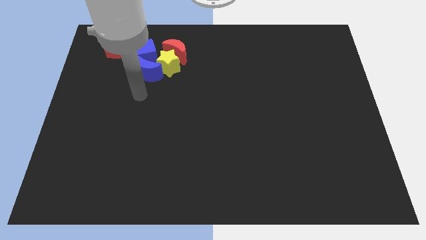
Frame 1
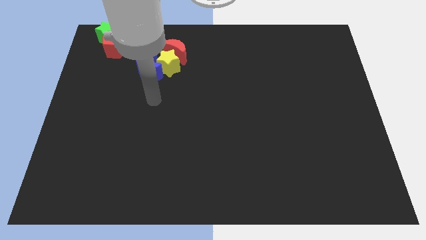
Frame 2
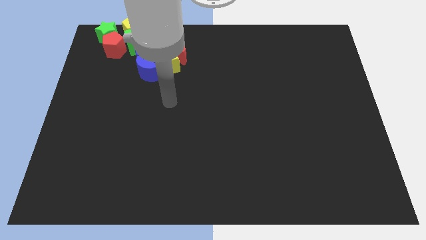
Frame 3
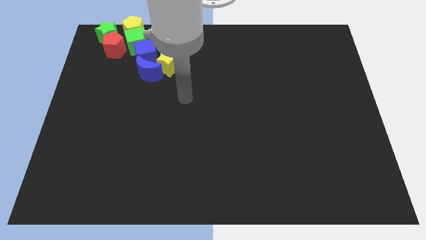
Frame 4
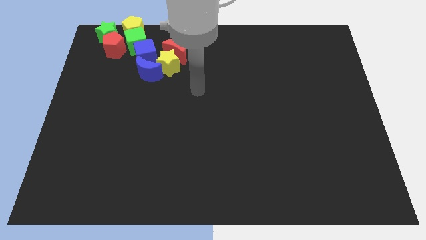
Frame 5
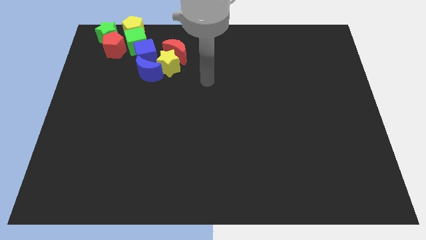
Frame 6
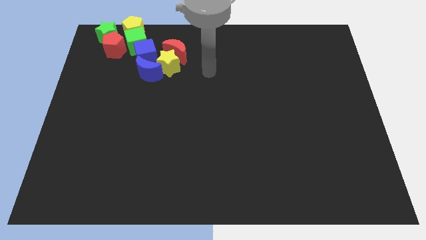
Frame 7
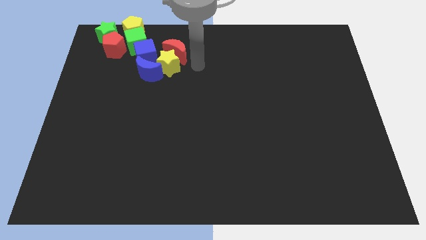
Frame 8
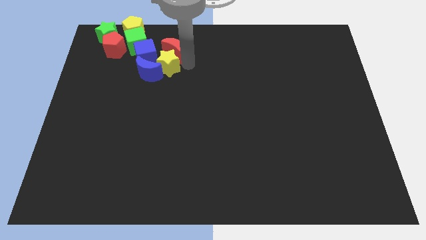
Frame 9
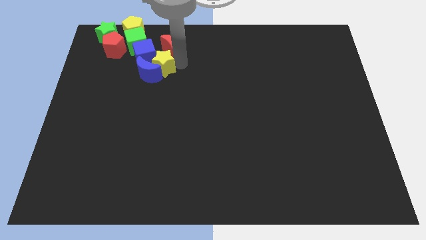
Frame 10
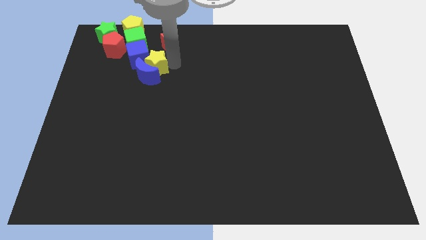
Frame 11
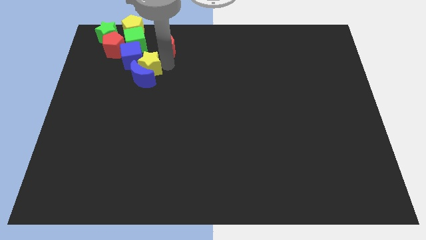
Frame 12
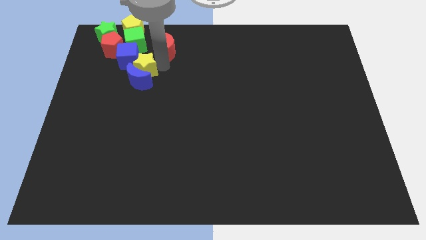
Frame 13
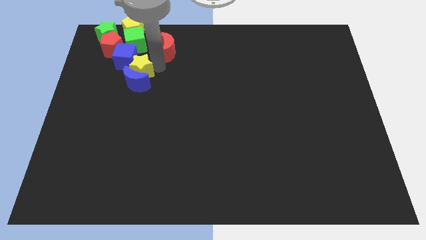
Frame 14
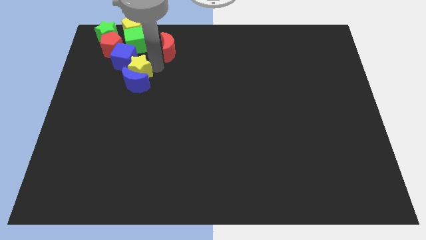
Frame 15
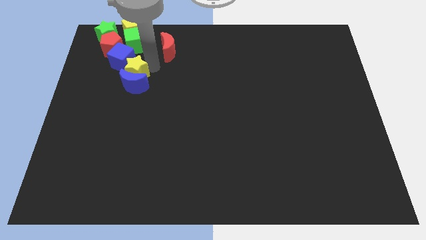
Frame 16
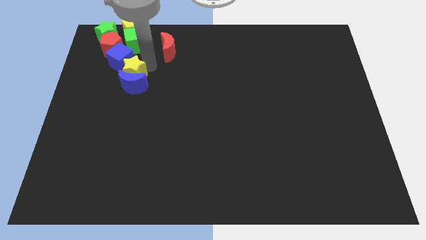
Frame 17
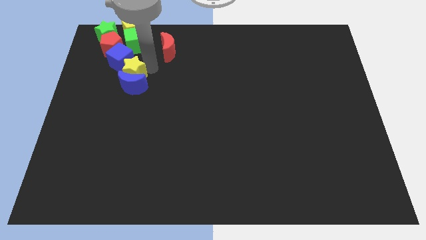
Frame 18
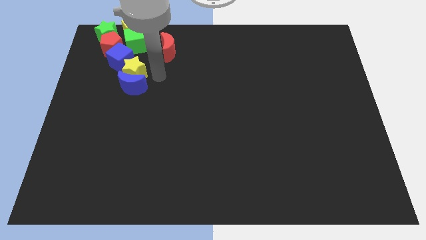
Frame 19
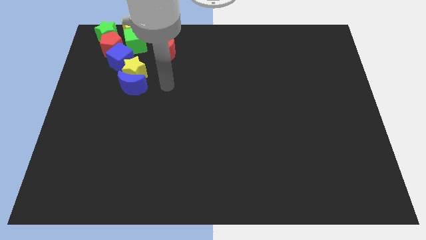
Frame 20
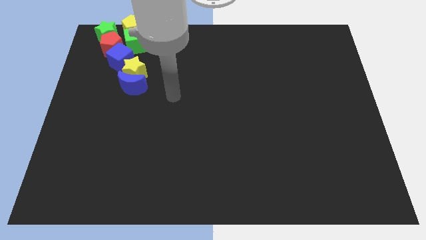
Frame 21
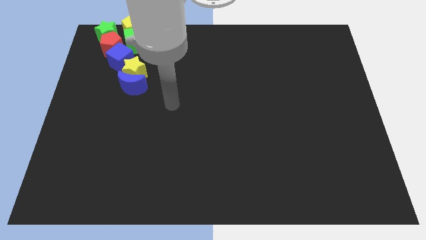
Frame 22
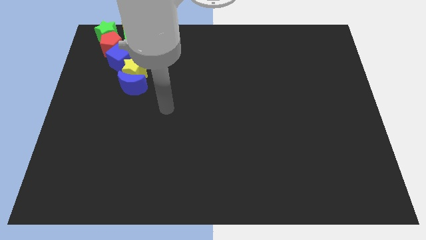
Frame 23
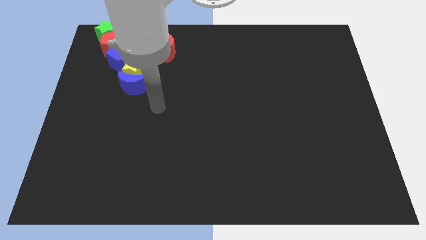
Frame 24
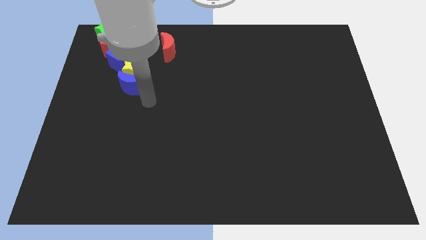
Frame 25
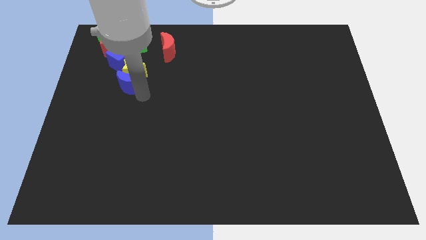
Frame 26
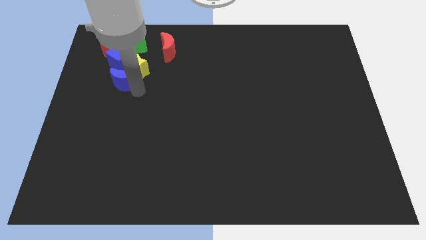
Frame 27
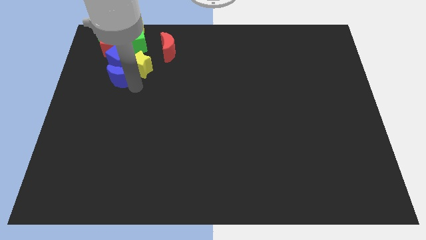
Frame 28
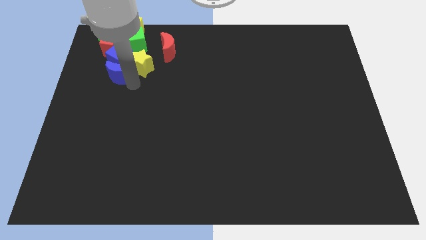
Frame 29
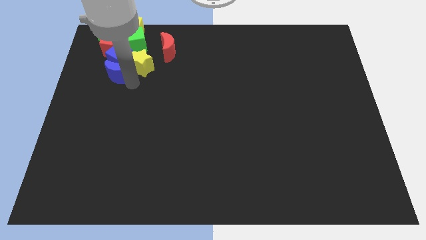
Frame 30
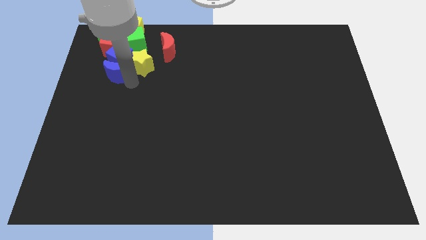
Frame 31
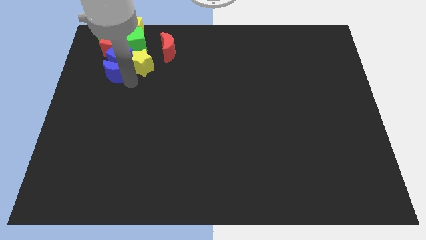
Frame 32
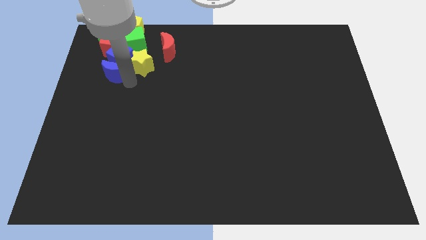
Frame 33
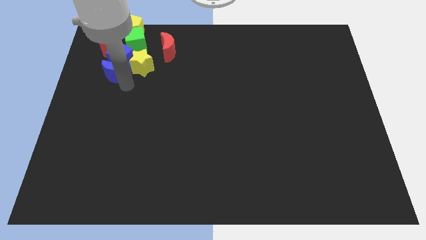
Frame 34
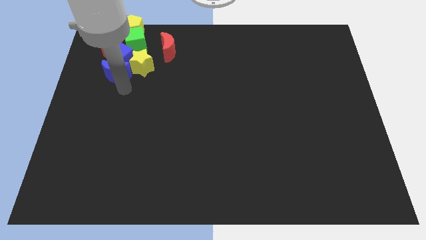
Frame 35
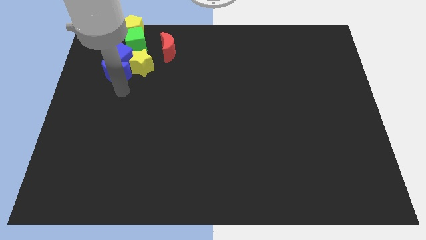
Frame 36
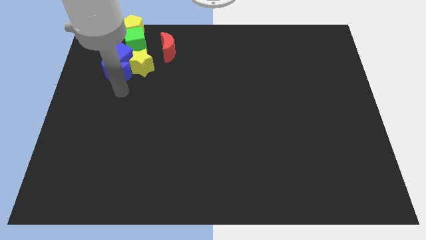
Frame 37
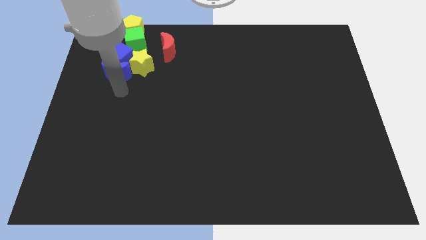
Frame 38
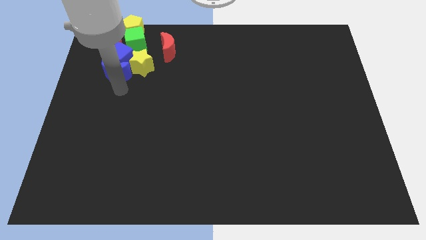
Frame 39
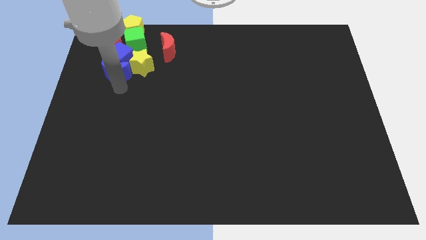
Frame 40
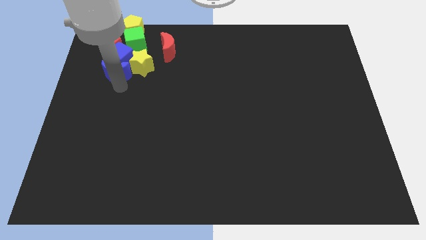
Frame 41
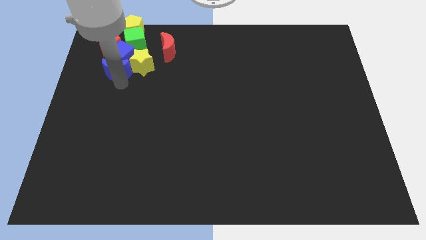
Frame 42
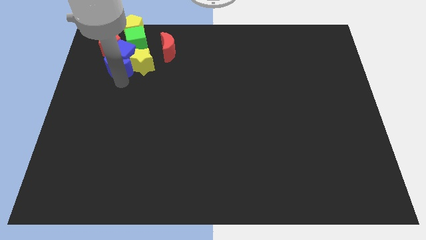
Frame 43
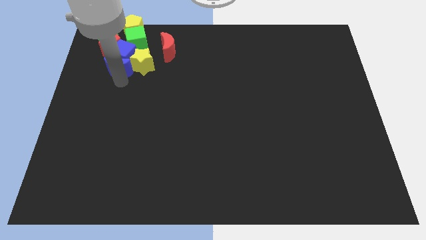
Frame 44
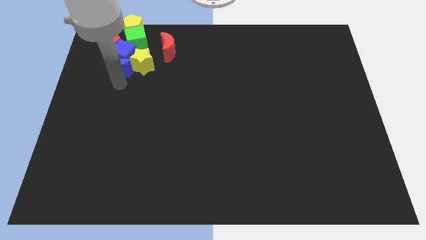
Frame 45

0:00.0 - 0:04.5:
push the blue blocks and yellow star into the group of blocks

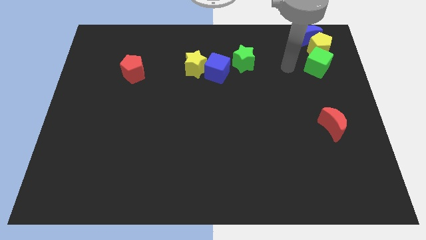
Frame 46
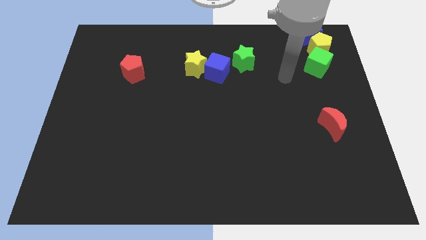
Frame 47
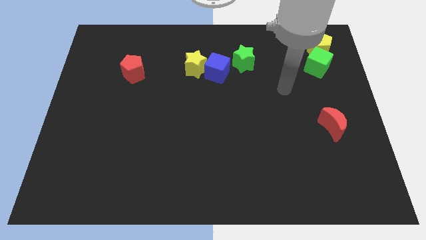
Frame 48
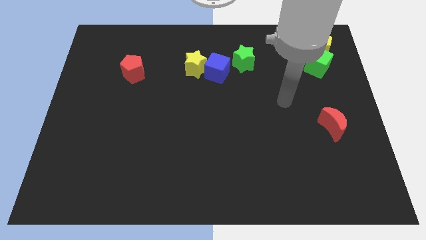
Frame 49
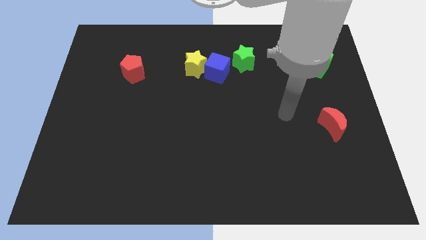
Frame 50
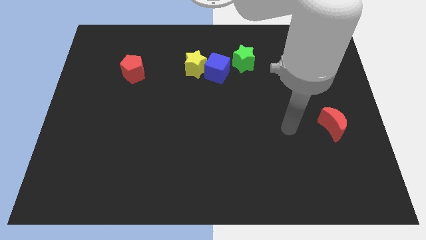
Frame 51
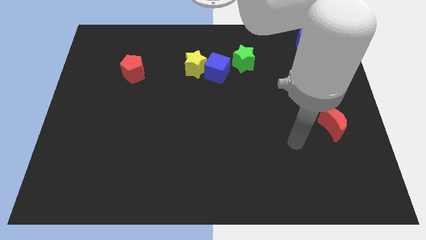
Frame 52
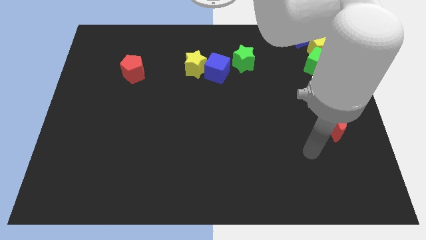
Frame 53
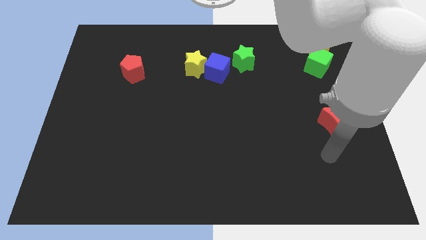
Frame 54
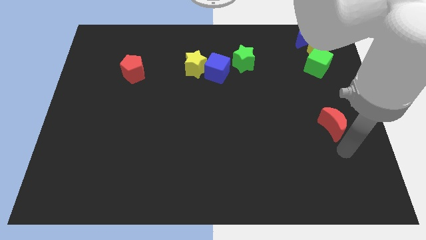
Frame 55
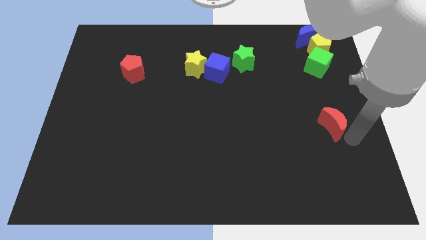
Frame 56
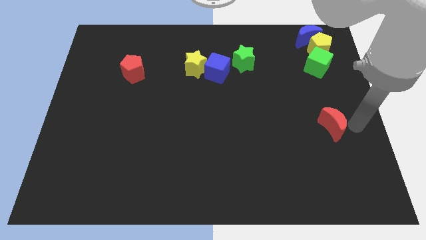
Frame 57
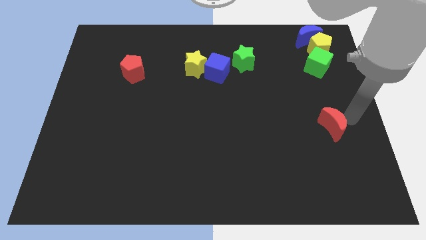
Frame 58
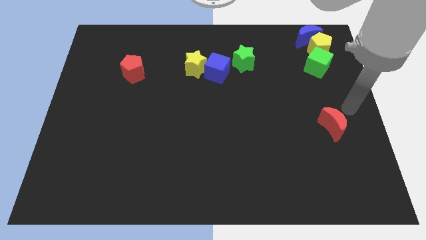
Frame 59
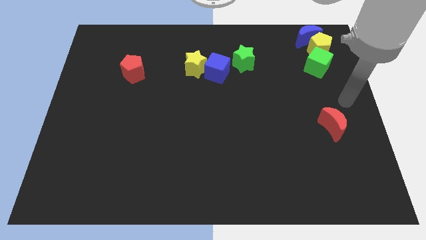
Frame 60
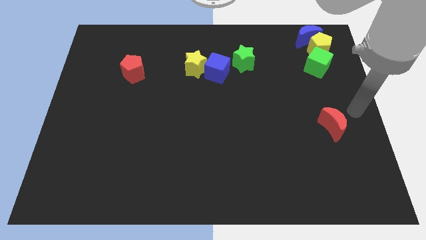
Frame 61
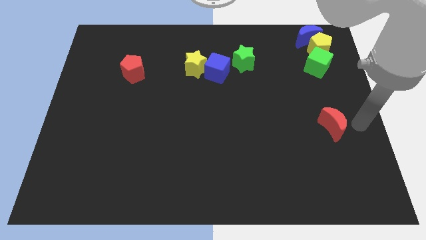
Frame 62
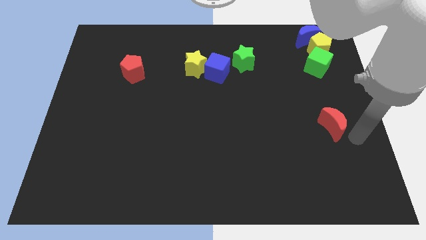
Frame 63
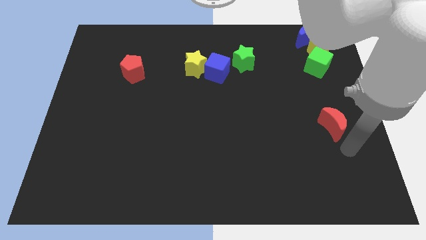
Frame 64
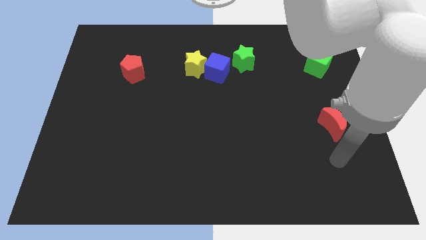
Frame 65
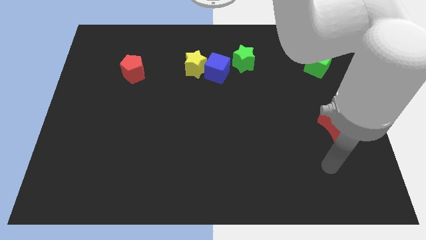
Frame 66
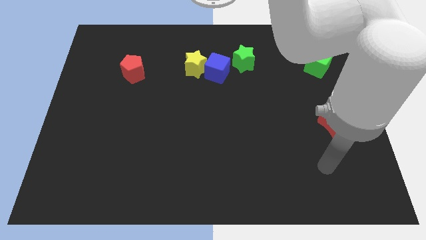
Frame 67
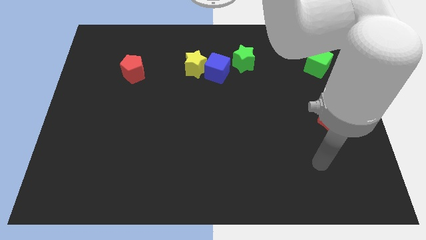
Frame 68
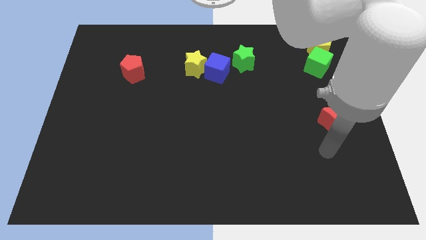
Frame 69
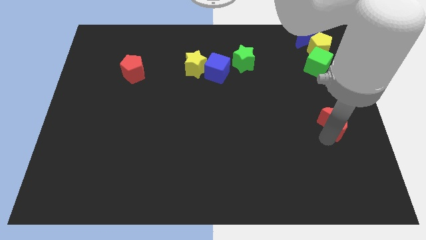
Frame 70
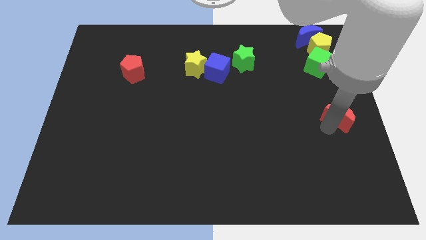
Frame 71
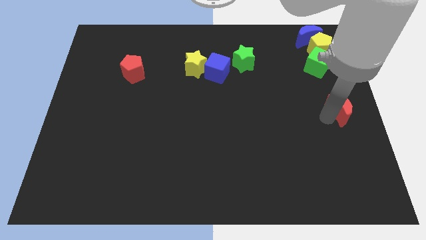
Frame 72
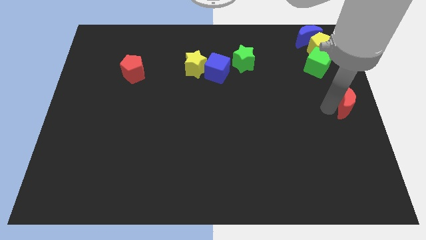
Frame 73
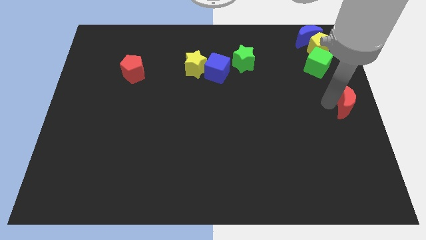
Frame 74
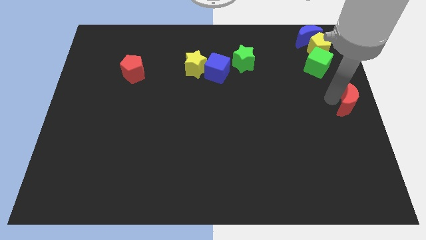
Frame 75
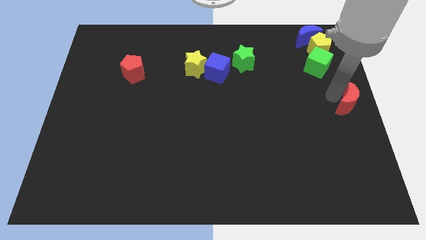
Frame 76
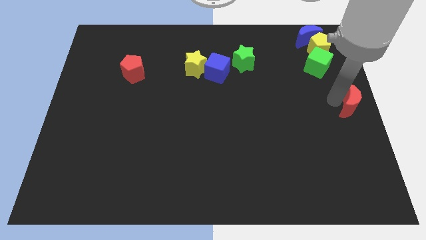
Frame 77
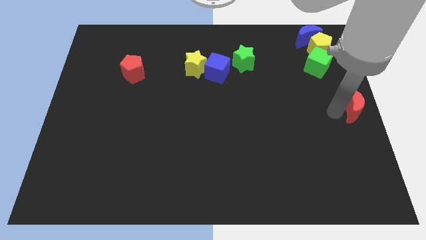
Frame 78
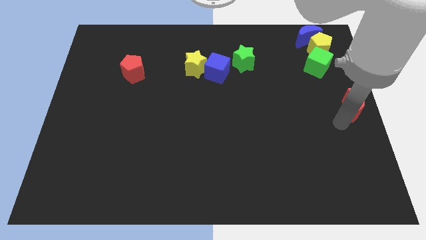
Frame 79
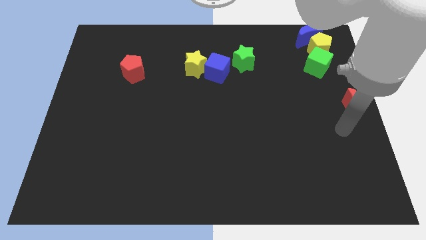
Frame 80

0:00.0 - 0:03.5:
move red moon to the middle right of the board

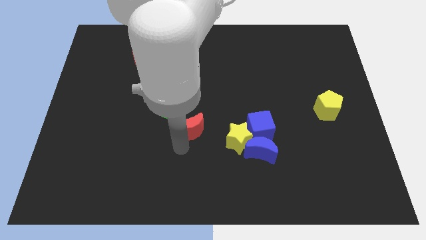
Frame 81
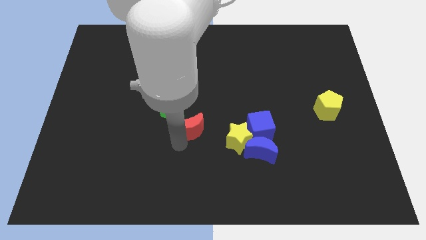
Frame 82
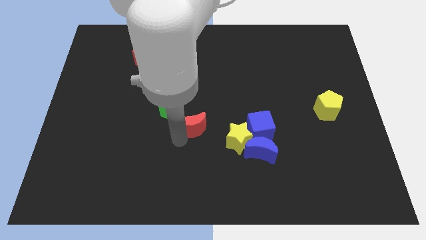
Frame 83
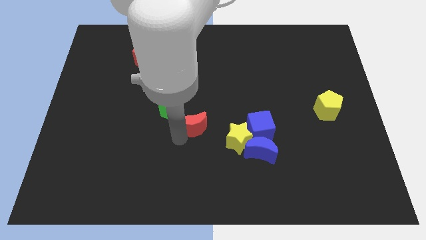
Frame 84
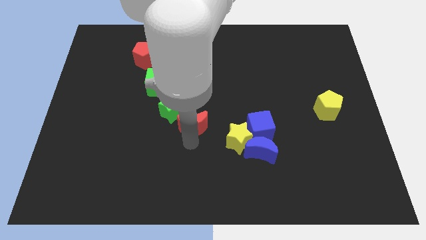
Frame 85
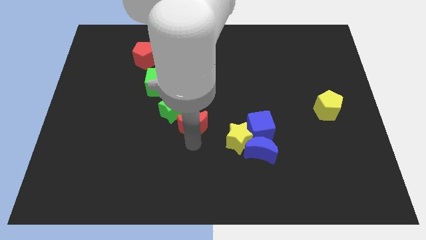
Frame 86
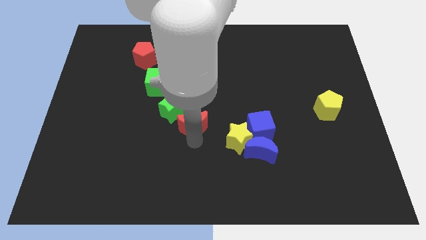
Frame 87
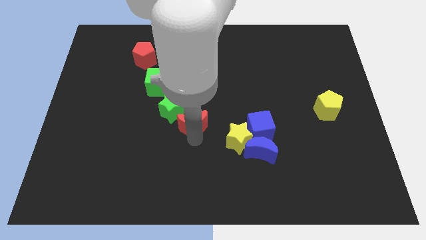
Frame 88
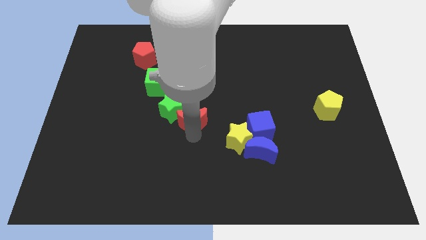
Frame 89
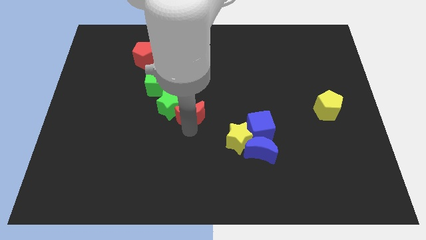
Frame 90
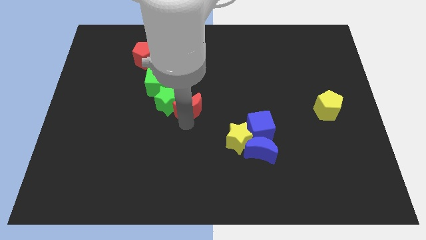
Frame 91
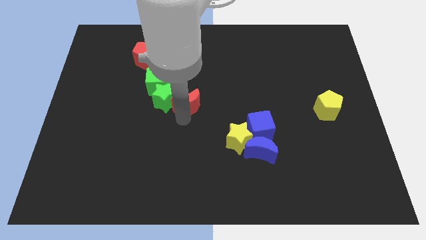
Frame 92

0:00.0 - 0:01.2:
push the red crescent into the green star
